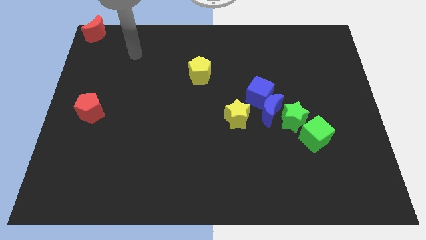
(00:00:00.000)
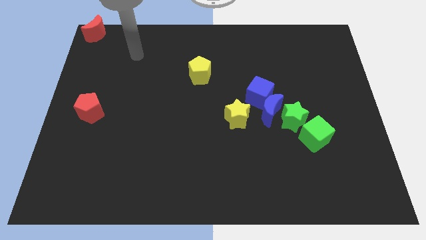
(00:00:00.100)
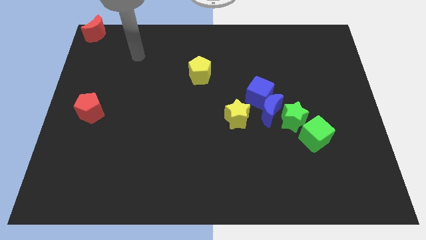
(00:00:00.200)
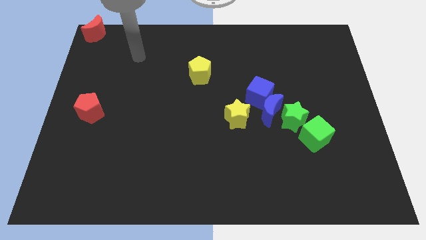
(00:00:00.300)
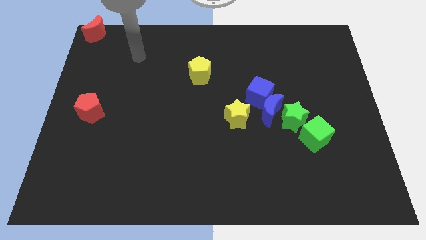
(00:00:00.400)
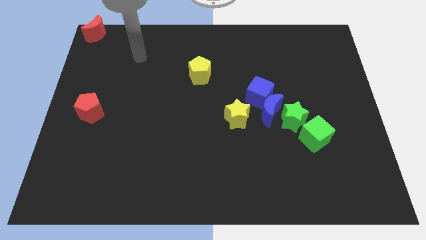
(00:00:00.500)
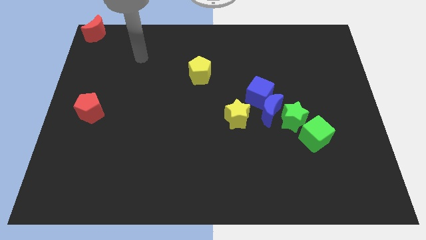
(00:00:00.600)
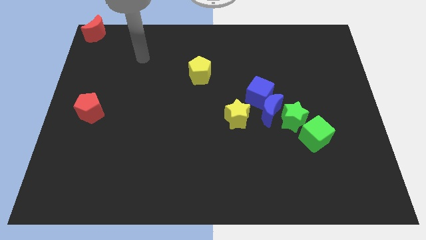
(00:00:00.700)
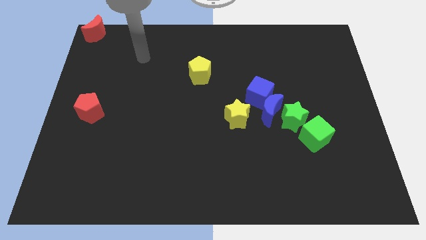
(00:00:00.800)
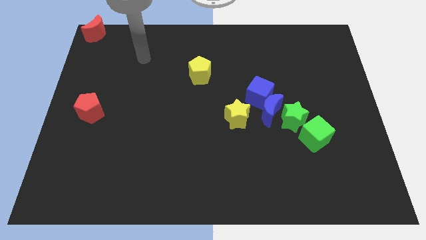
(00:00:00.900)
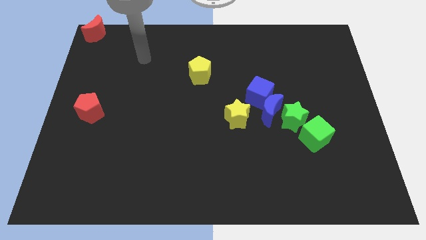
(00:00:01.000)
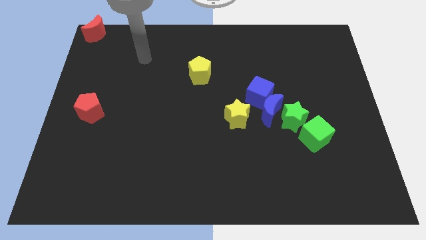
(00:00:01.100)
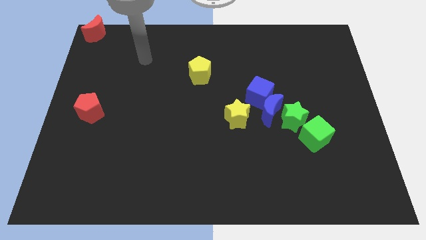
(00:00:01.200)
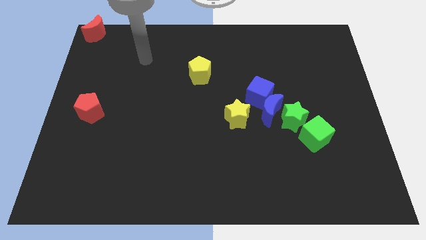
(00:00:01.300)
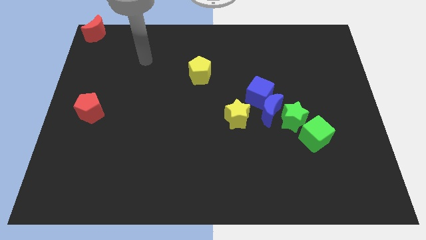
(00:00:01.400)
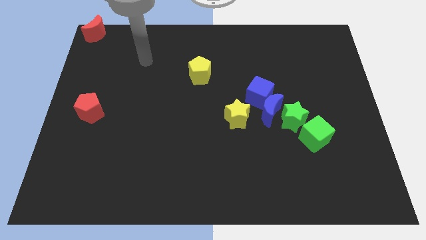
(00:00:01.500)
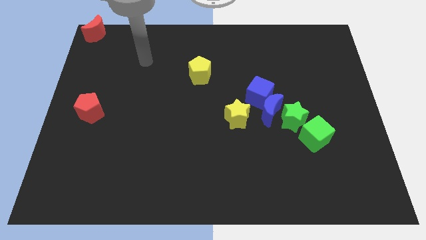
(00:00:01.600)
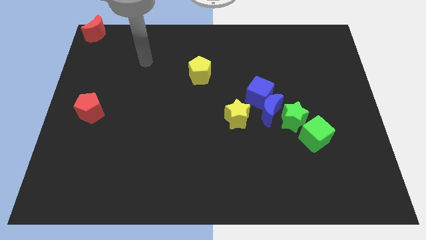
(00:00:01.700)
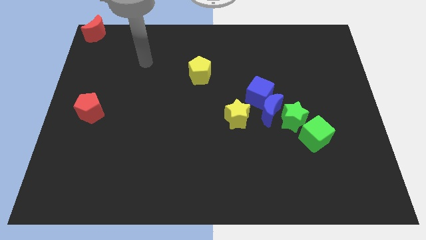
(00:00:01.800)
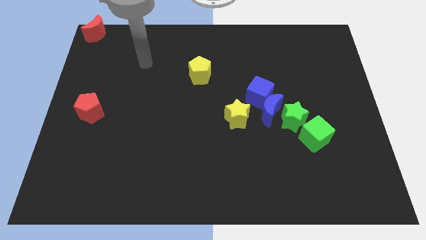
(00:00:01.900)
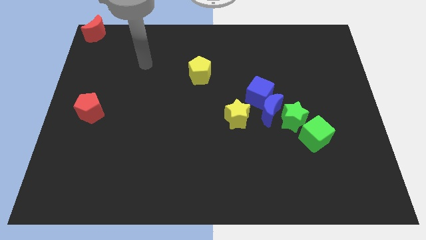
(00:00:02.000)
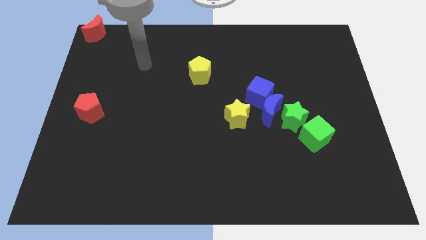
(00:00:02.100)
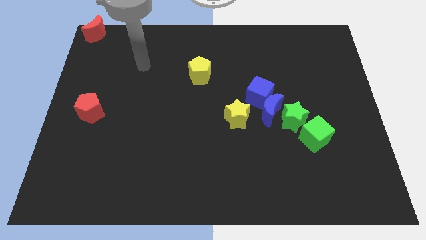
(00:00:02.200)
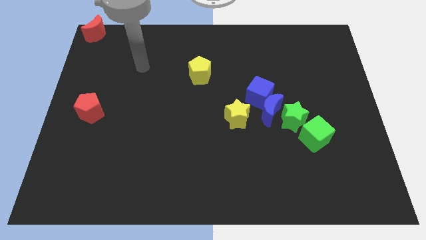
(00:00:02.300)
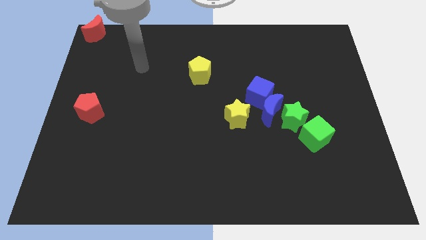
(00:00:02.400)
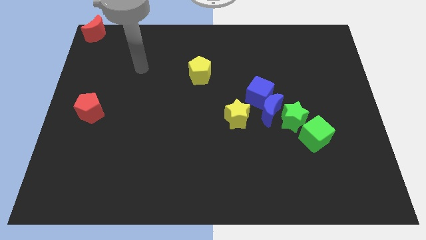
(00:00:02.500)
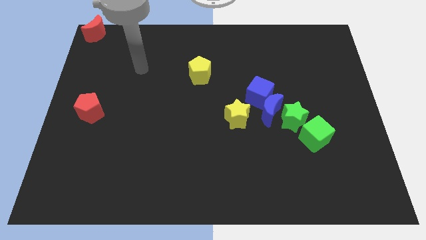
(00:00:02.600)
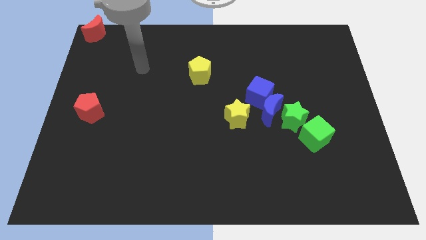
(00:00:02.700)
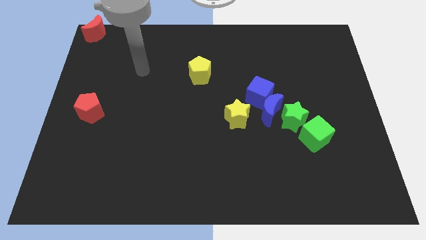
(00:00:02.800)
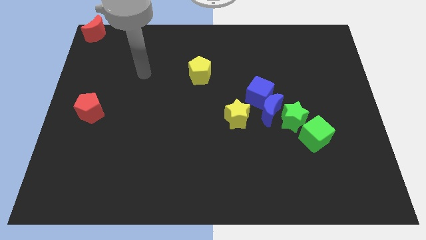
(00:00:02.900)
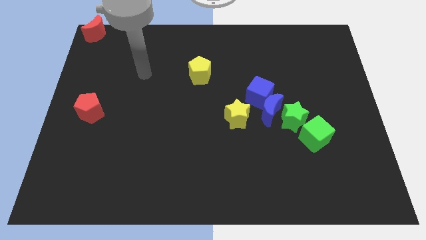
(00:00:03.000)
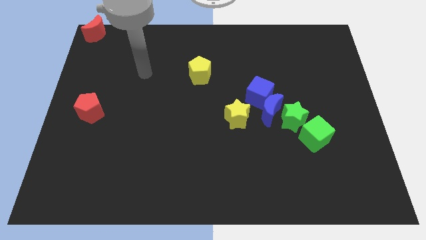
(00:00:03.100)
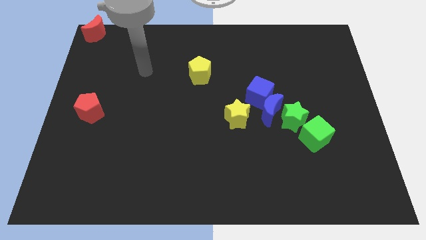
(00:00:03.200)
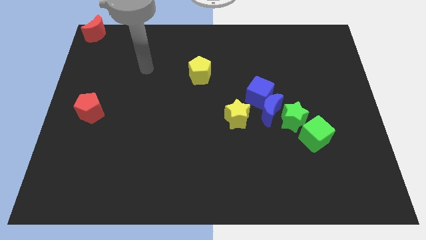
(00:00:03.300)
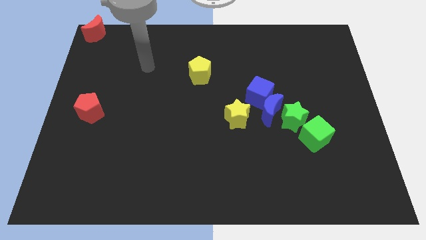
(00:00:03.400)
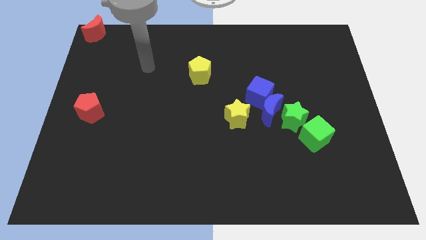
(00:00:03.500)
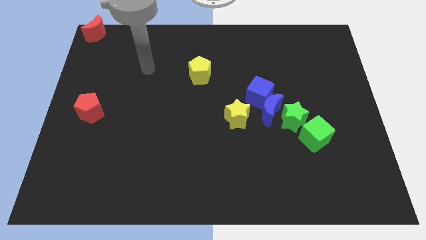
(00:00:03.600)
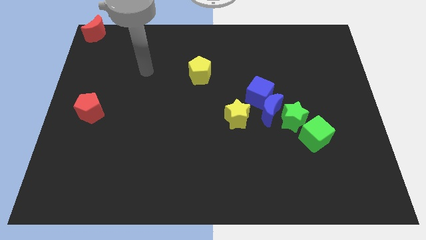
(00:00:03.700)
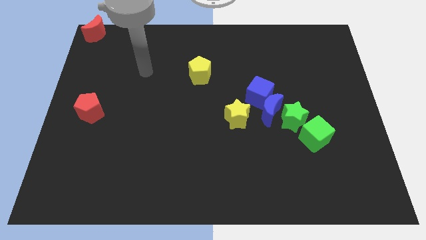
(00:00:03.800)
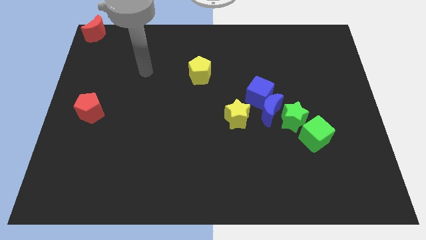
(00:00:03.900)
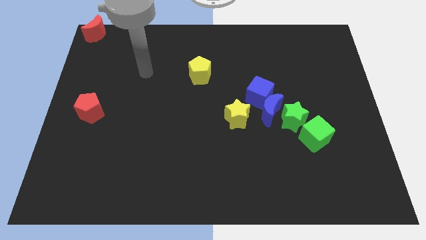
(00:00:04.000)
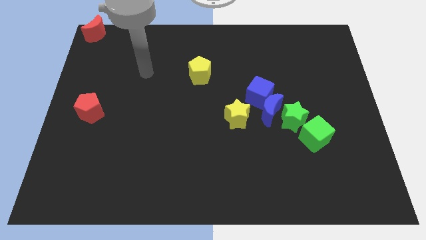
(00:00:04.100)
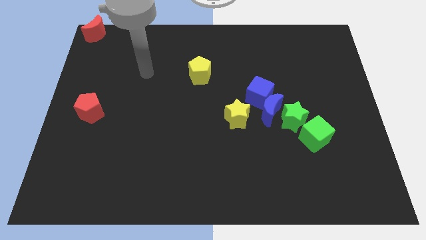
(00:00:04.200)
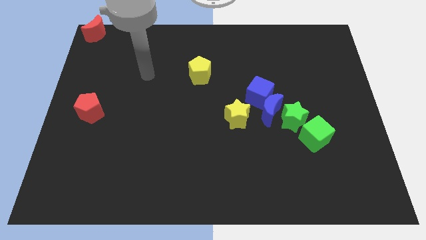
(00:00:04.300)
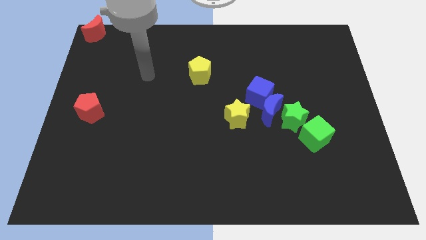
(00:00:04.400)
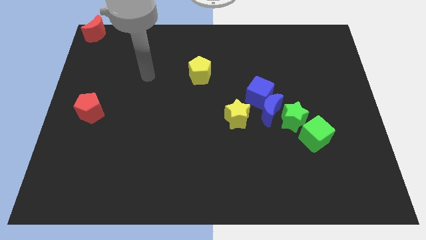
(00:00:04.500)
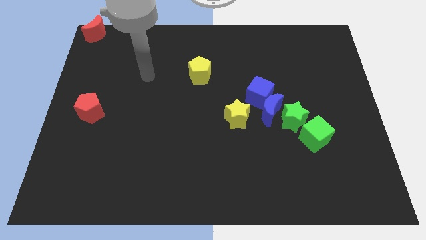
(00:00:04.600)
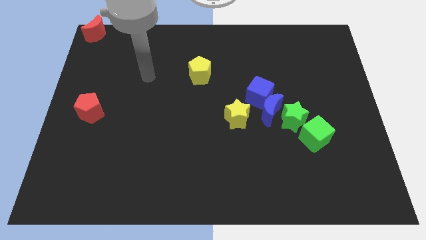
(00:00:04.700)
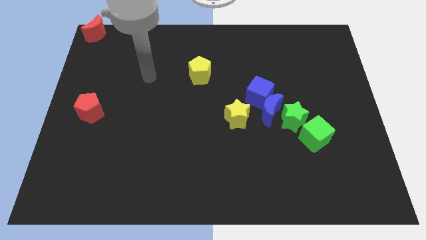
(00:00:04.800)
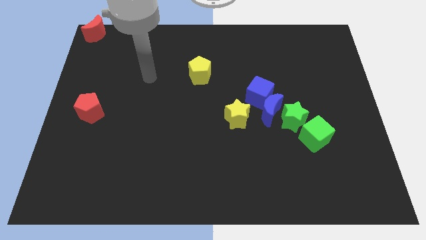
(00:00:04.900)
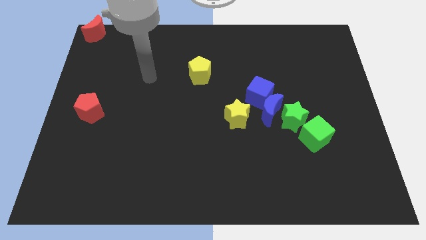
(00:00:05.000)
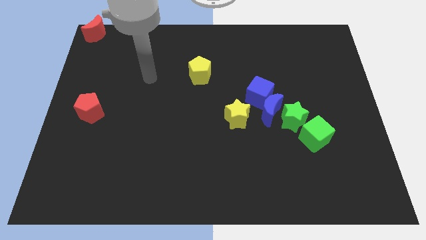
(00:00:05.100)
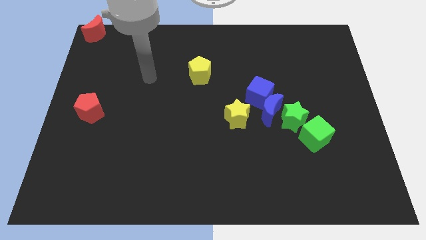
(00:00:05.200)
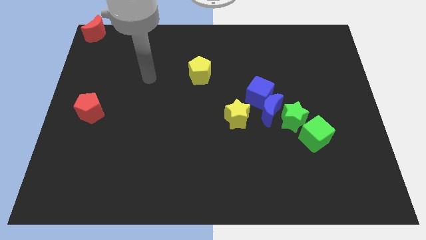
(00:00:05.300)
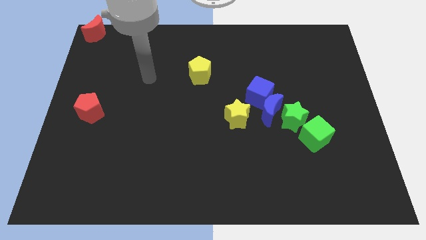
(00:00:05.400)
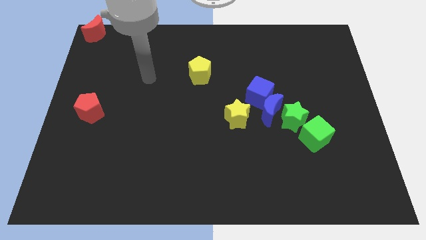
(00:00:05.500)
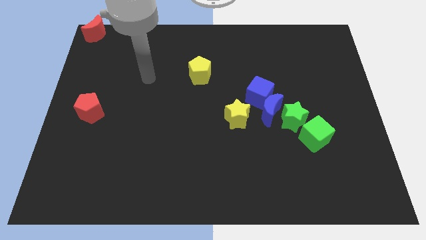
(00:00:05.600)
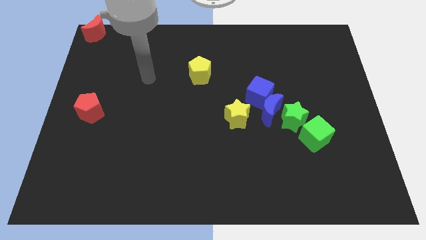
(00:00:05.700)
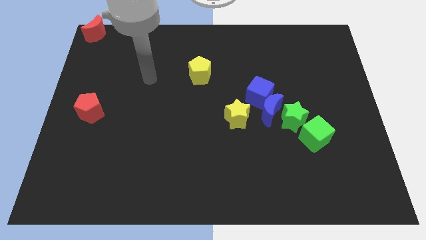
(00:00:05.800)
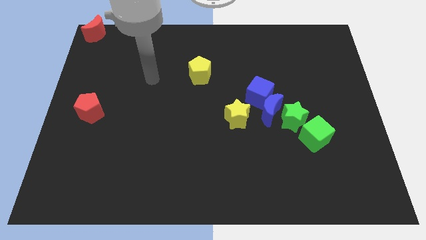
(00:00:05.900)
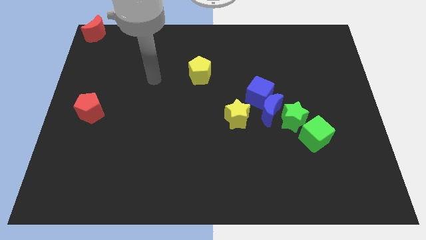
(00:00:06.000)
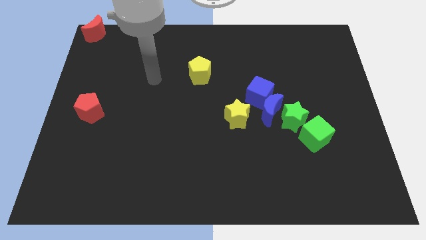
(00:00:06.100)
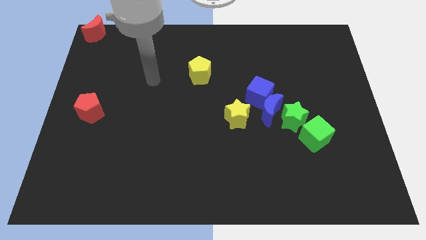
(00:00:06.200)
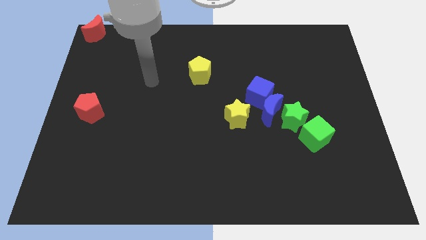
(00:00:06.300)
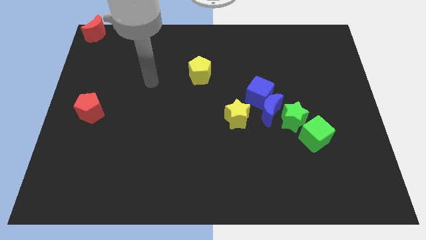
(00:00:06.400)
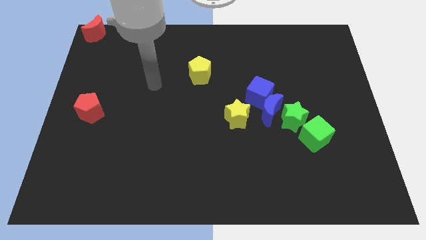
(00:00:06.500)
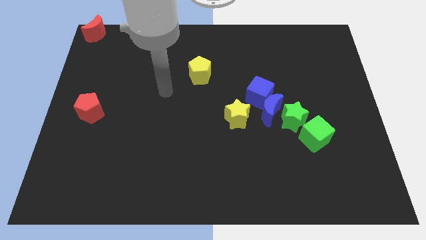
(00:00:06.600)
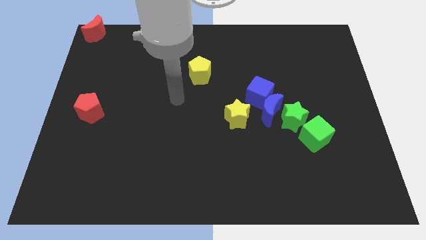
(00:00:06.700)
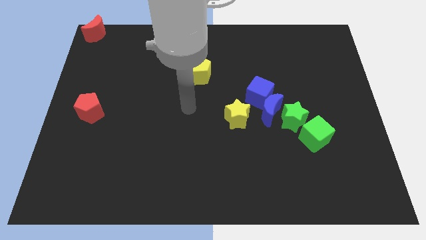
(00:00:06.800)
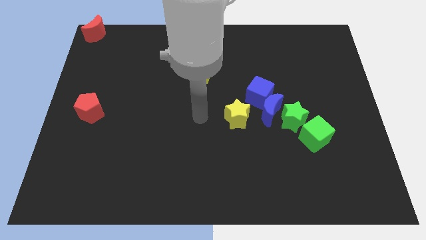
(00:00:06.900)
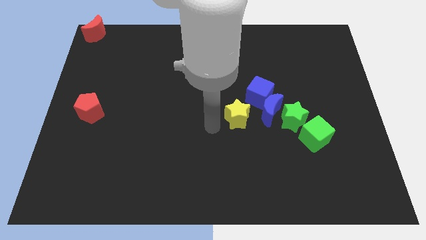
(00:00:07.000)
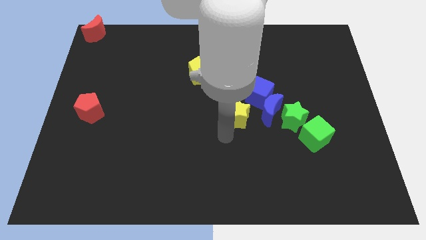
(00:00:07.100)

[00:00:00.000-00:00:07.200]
move your arm towards the yellow star

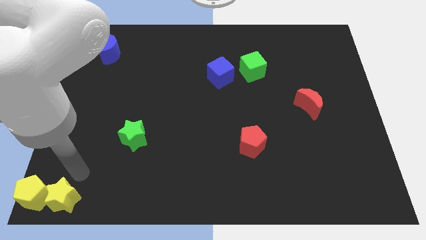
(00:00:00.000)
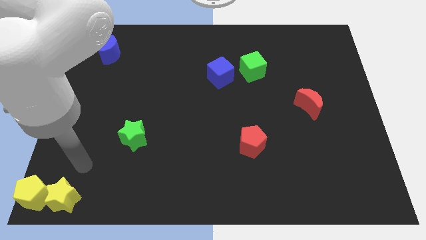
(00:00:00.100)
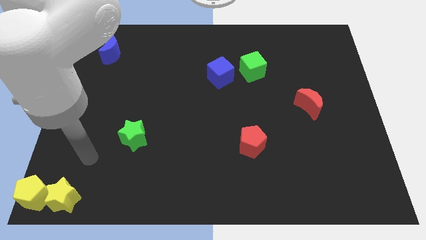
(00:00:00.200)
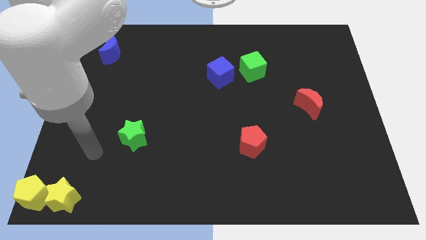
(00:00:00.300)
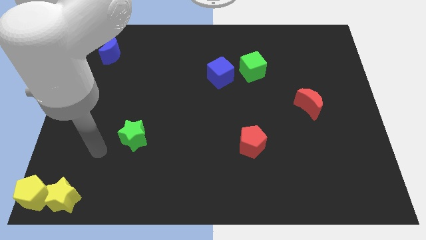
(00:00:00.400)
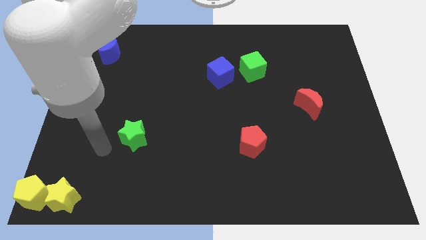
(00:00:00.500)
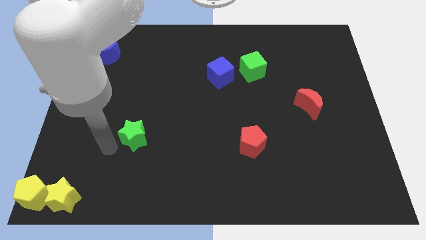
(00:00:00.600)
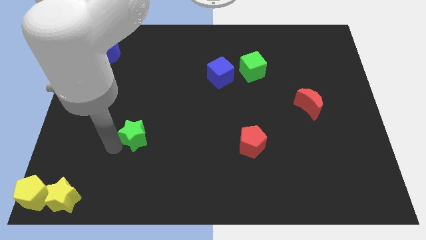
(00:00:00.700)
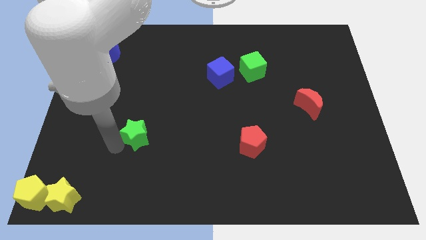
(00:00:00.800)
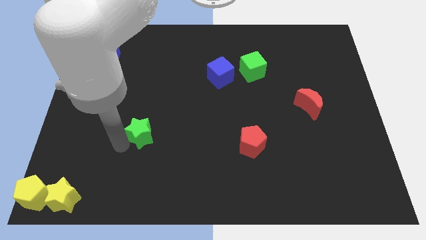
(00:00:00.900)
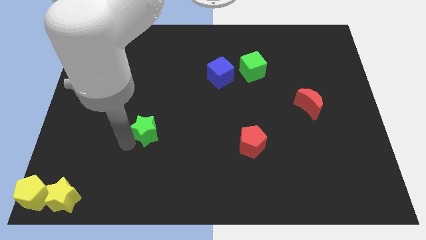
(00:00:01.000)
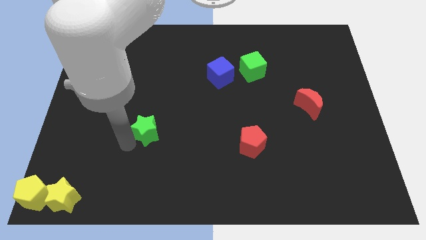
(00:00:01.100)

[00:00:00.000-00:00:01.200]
move the green star slightly to the right

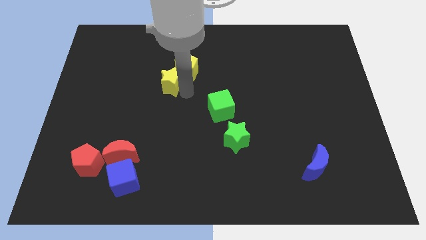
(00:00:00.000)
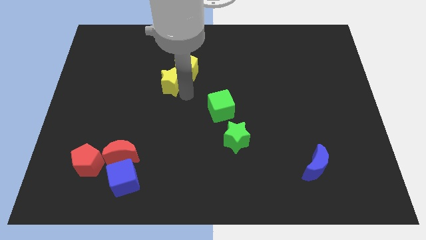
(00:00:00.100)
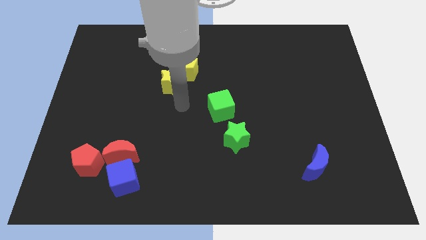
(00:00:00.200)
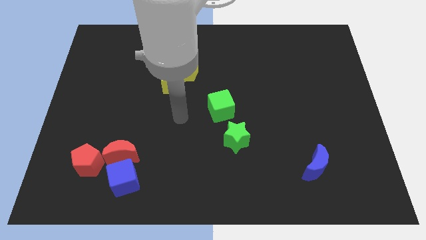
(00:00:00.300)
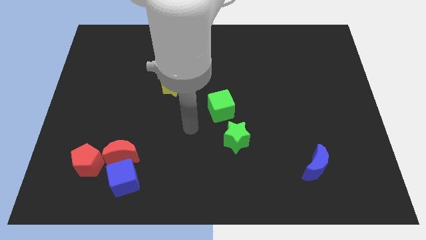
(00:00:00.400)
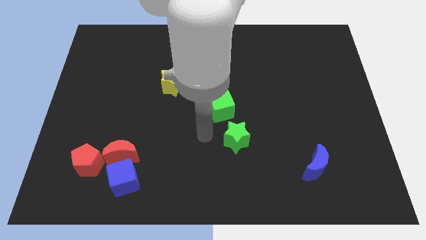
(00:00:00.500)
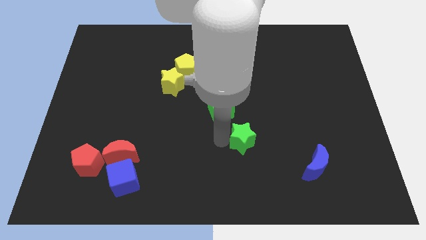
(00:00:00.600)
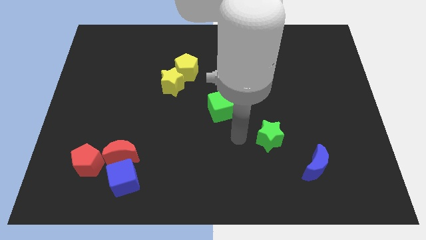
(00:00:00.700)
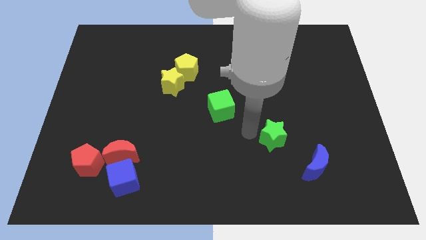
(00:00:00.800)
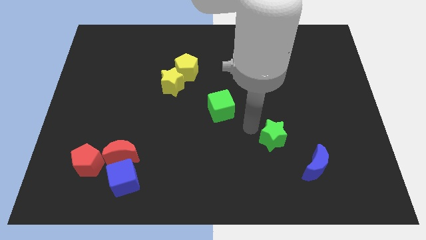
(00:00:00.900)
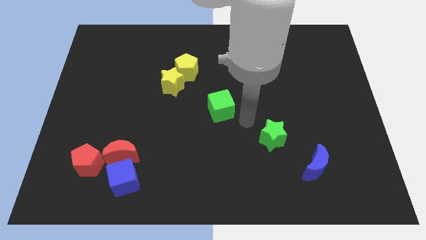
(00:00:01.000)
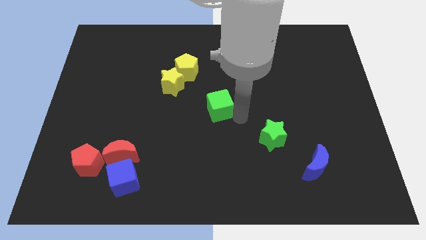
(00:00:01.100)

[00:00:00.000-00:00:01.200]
place green star to the top left of blue moon
